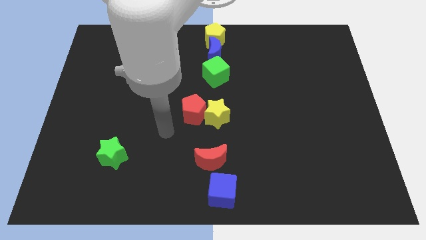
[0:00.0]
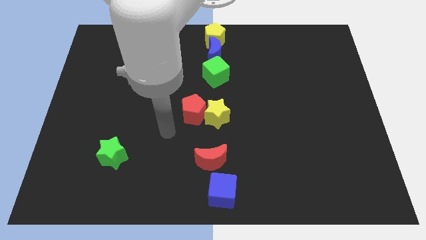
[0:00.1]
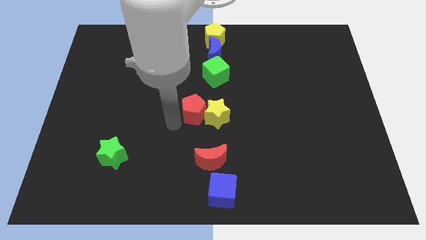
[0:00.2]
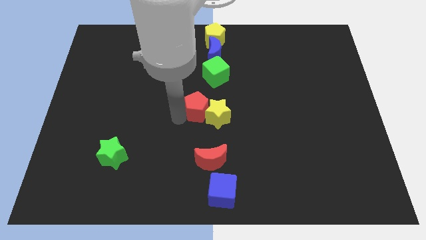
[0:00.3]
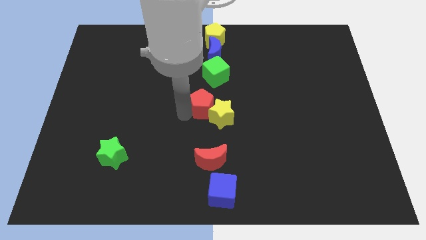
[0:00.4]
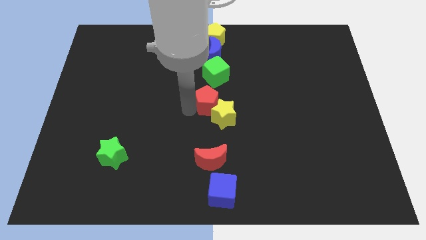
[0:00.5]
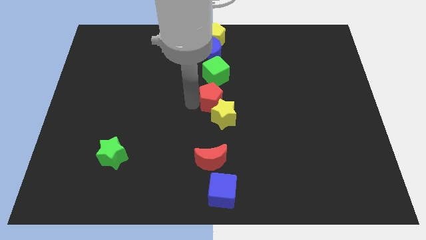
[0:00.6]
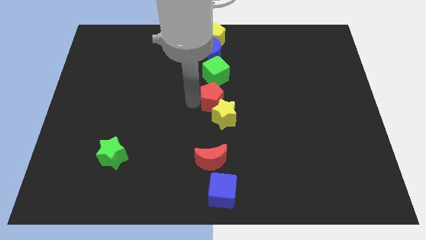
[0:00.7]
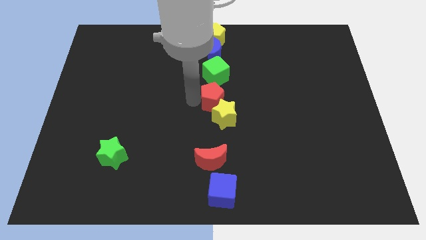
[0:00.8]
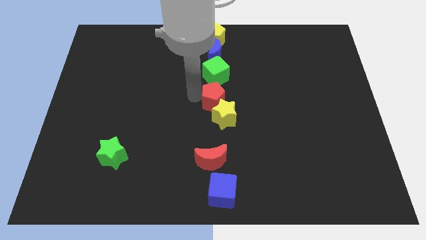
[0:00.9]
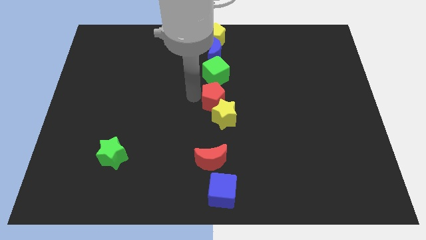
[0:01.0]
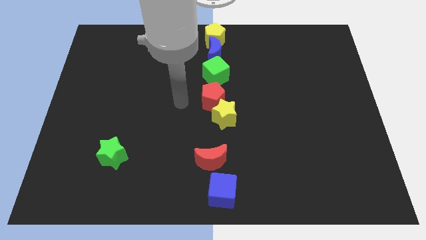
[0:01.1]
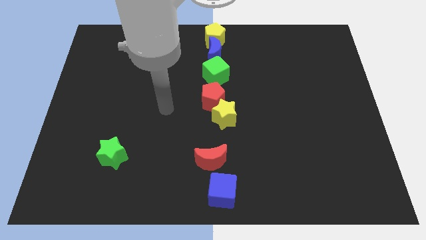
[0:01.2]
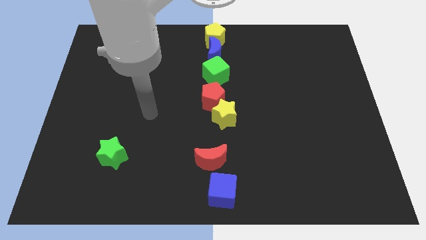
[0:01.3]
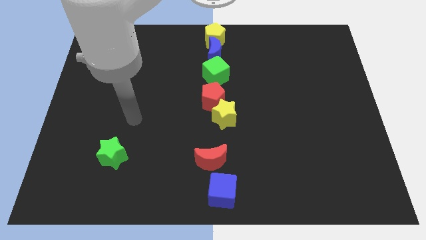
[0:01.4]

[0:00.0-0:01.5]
place the red pentagon above the yellow star

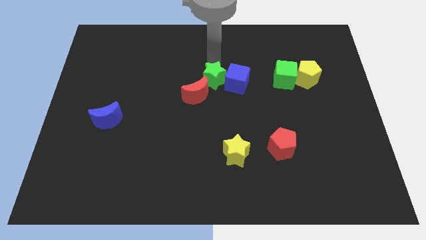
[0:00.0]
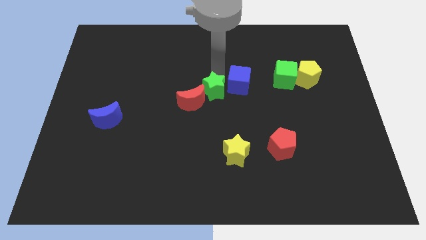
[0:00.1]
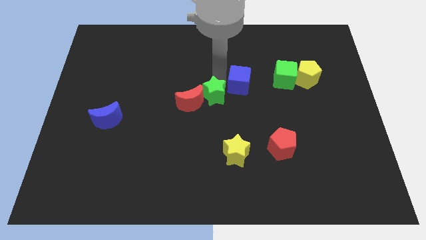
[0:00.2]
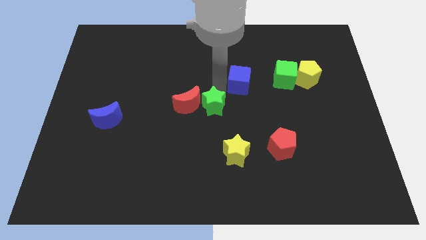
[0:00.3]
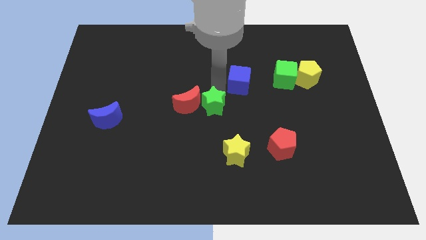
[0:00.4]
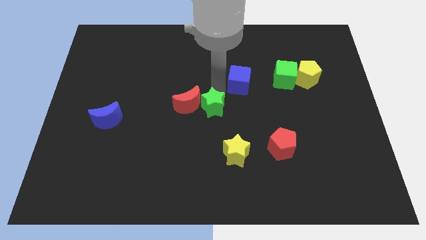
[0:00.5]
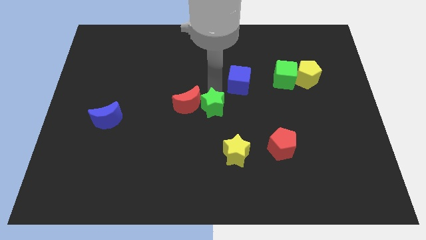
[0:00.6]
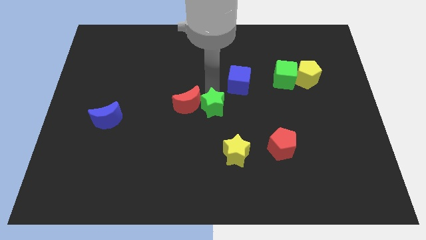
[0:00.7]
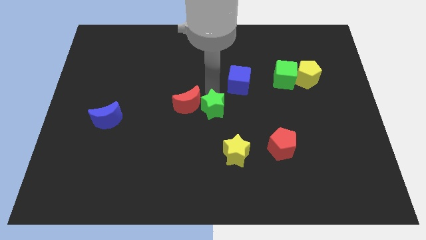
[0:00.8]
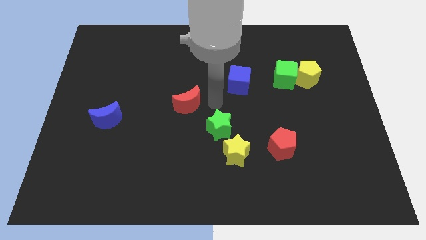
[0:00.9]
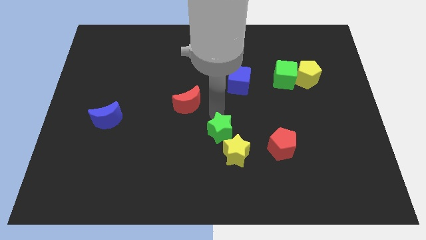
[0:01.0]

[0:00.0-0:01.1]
move green star towards yellow star

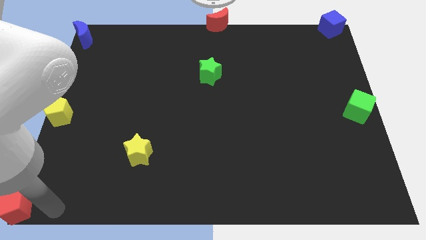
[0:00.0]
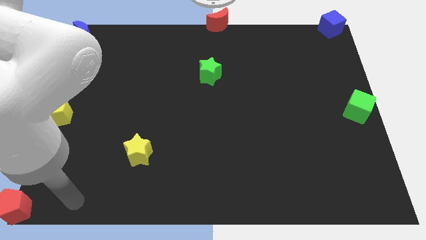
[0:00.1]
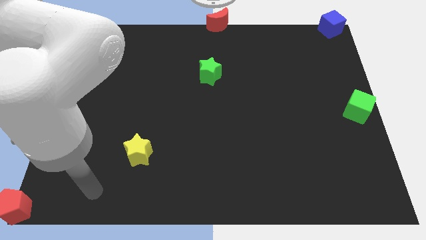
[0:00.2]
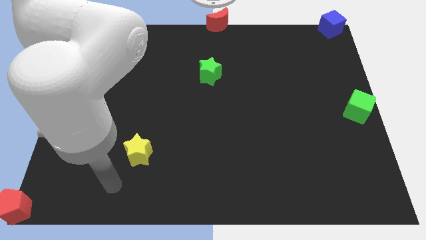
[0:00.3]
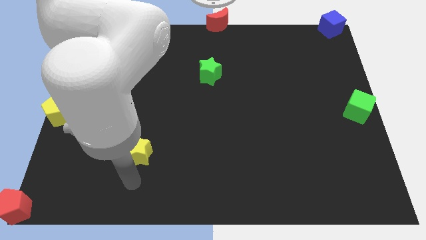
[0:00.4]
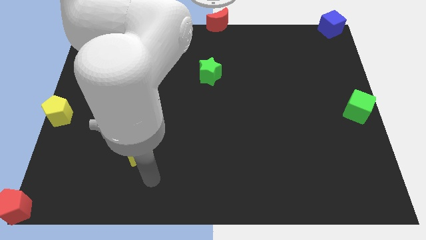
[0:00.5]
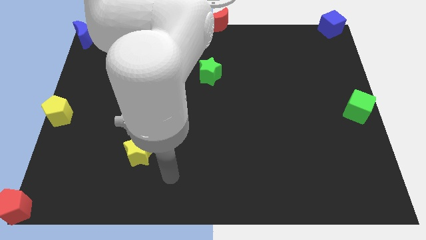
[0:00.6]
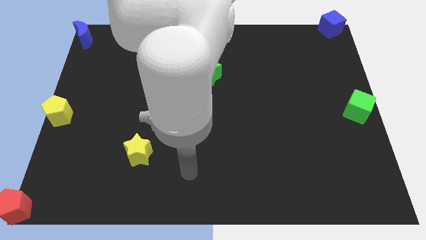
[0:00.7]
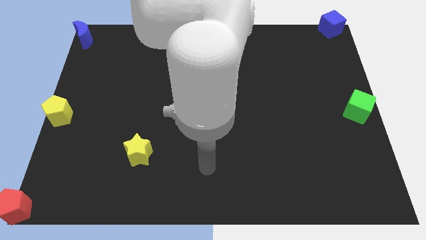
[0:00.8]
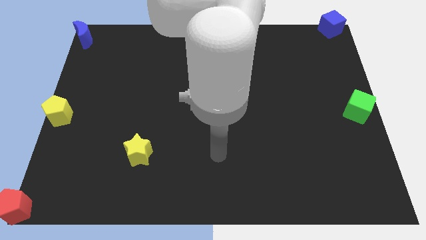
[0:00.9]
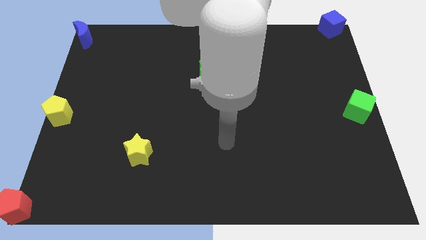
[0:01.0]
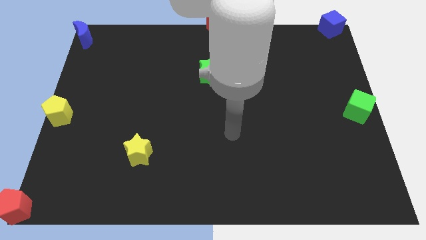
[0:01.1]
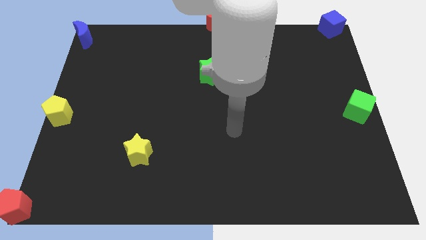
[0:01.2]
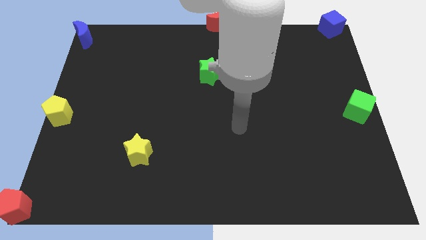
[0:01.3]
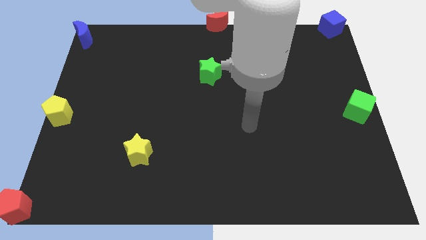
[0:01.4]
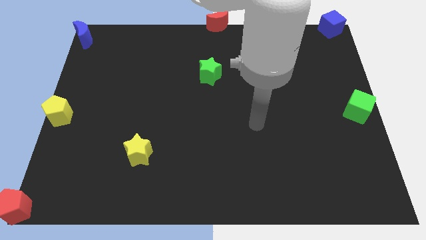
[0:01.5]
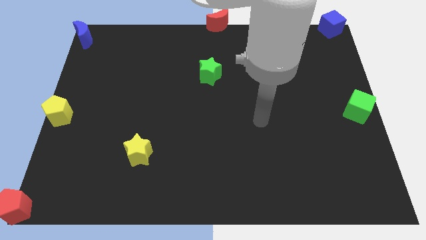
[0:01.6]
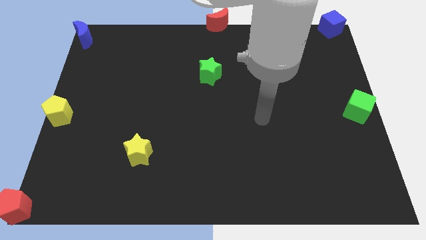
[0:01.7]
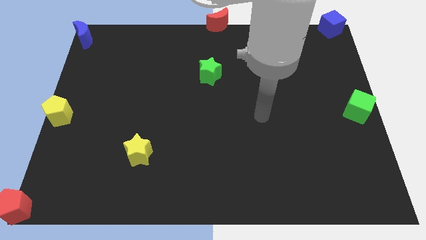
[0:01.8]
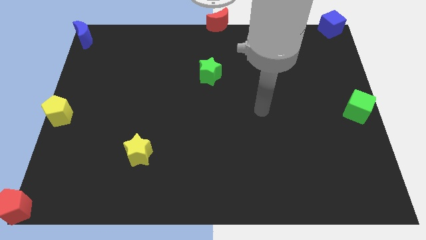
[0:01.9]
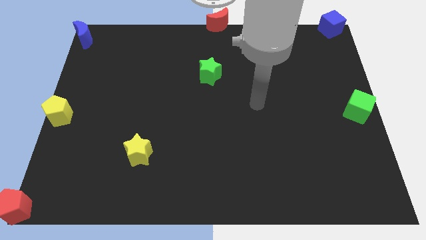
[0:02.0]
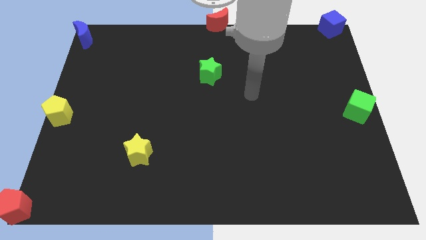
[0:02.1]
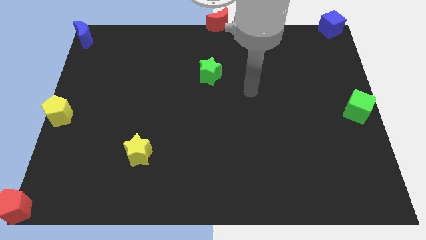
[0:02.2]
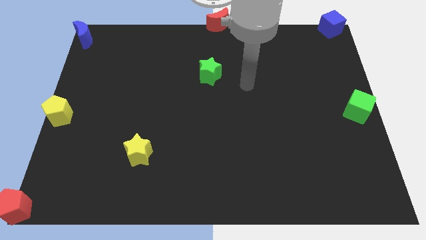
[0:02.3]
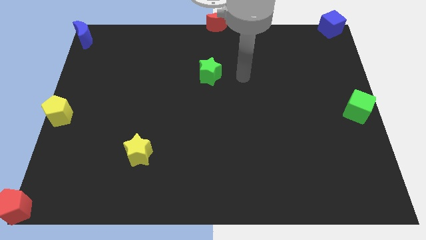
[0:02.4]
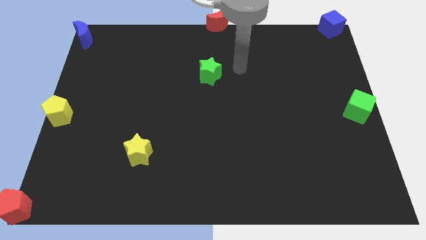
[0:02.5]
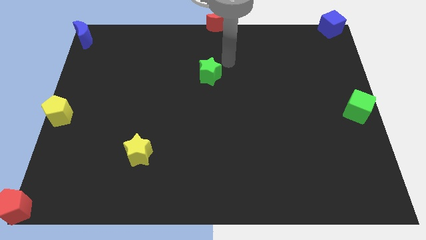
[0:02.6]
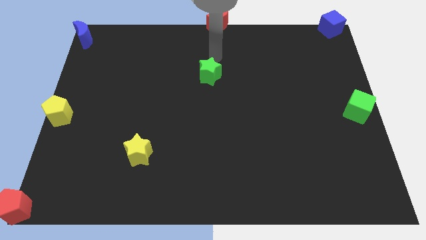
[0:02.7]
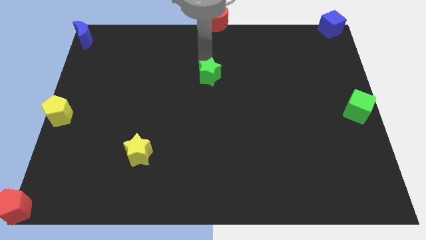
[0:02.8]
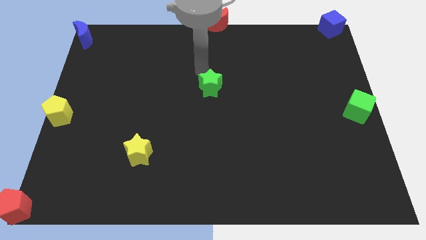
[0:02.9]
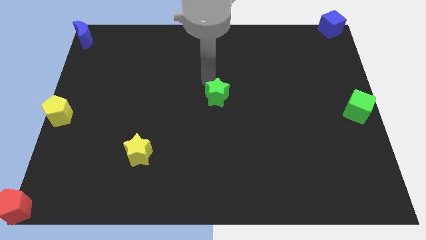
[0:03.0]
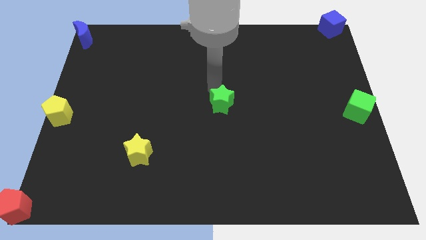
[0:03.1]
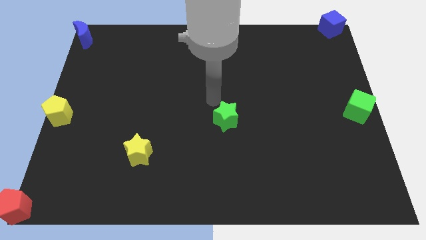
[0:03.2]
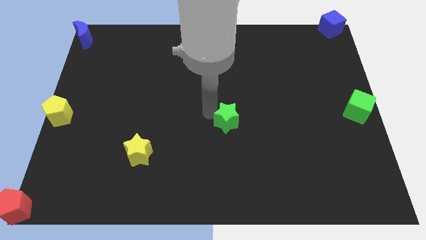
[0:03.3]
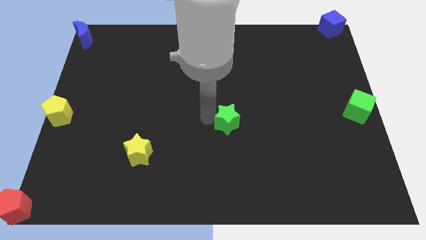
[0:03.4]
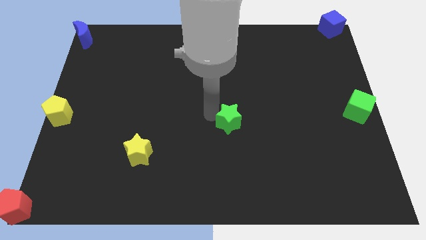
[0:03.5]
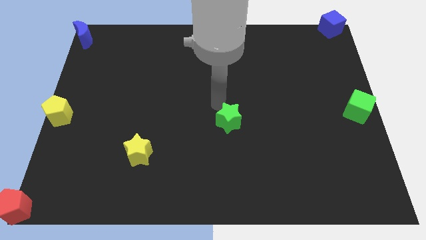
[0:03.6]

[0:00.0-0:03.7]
push the green star to the center of the board

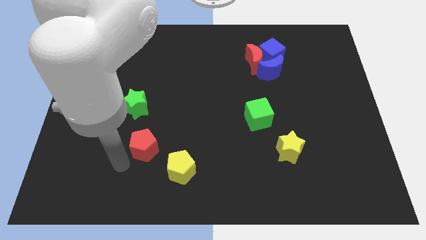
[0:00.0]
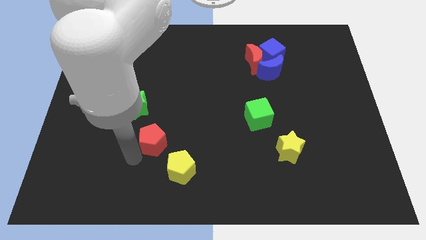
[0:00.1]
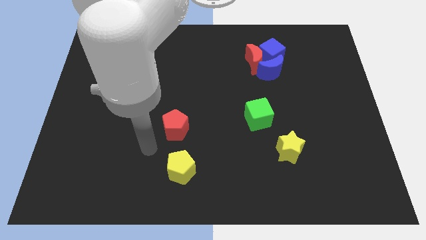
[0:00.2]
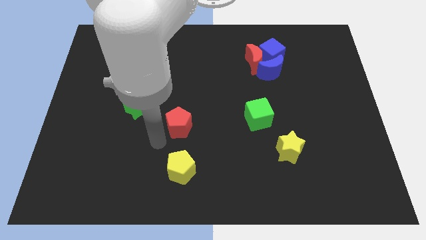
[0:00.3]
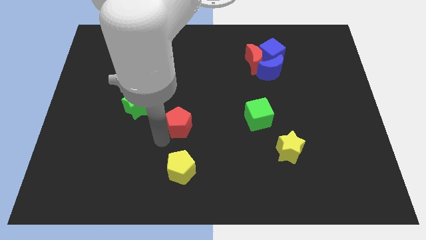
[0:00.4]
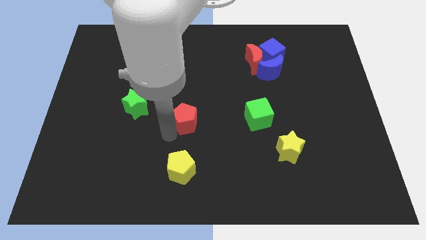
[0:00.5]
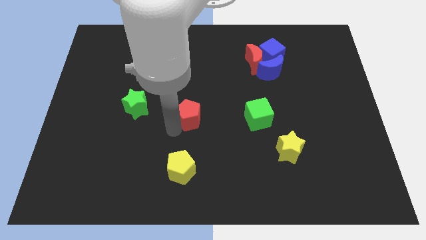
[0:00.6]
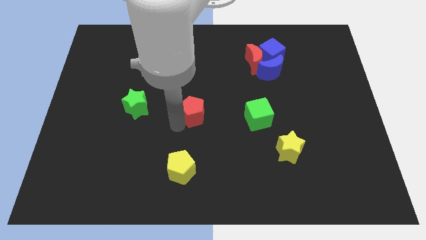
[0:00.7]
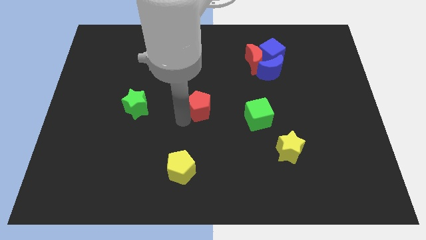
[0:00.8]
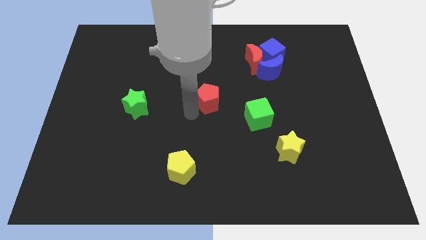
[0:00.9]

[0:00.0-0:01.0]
place the red pentagon at the center of the board

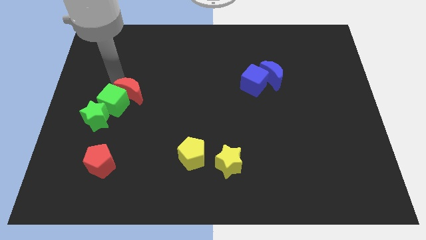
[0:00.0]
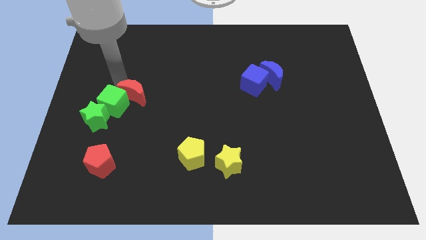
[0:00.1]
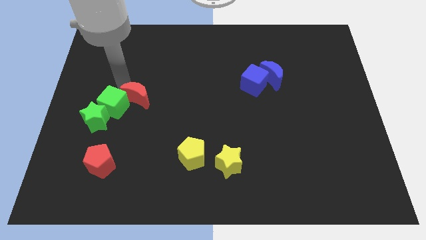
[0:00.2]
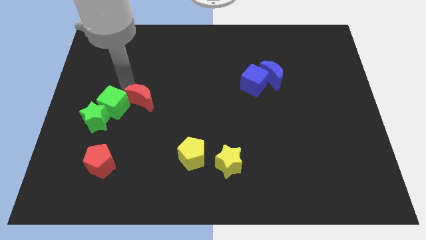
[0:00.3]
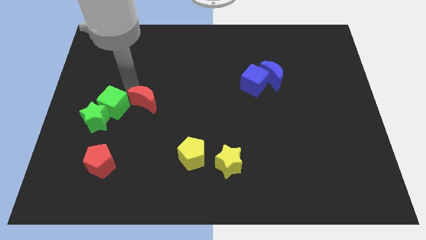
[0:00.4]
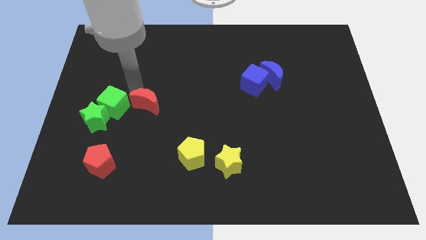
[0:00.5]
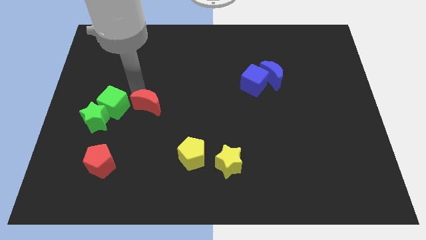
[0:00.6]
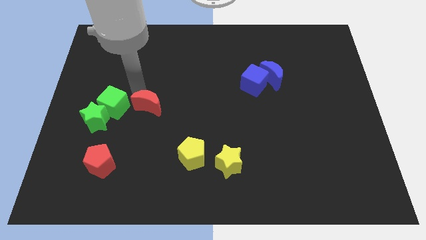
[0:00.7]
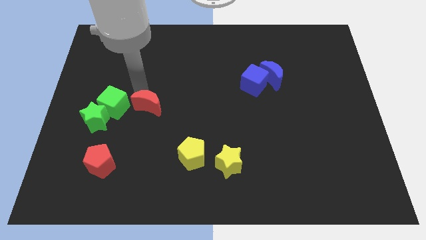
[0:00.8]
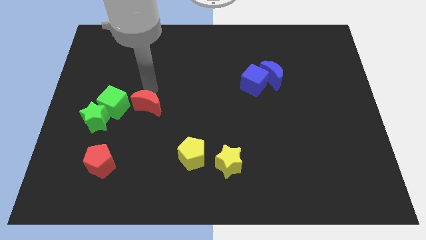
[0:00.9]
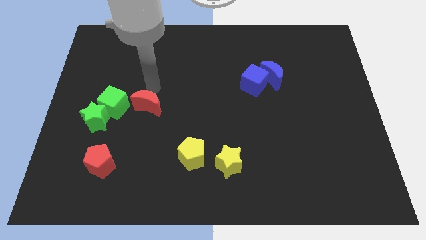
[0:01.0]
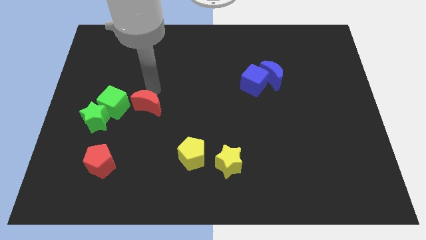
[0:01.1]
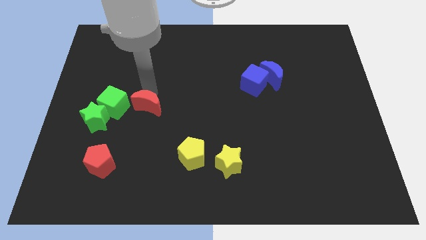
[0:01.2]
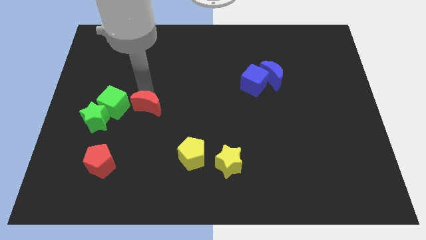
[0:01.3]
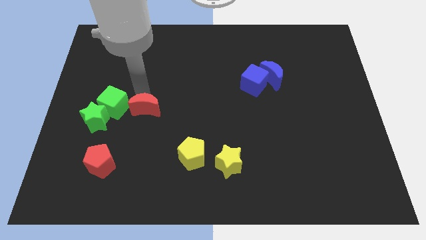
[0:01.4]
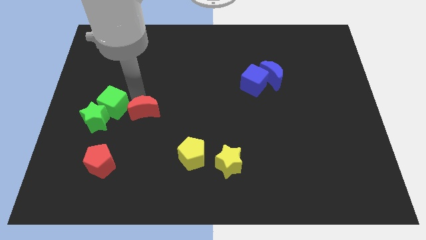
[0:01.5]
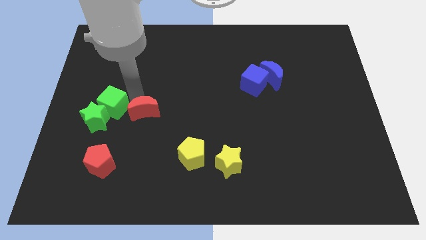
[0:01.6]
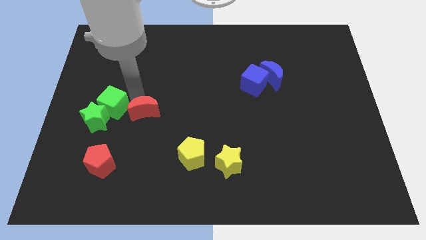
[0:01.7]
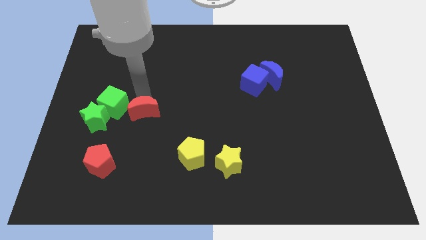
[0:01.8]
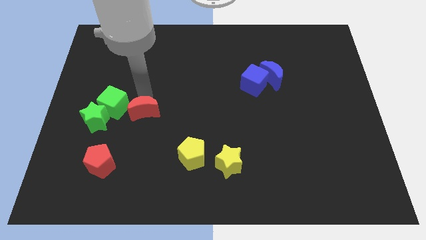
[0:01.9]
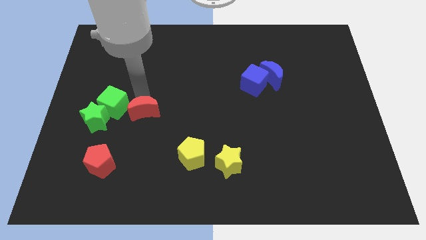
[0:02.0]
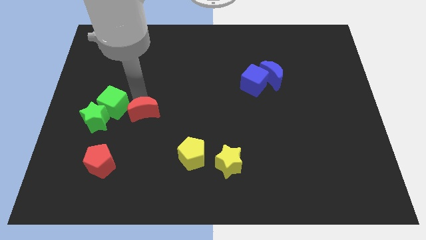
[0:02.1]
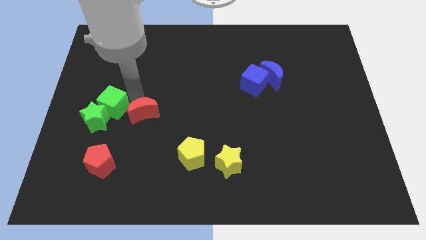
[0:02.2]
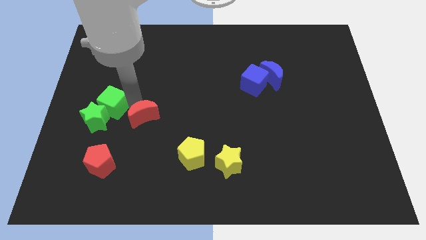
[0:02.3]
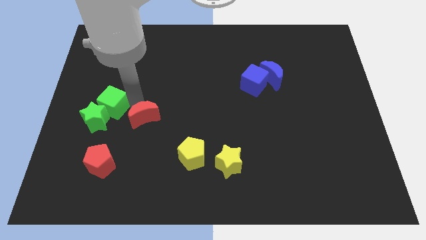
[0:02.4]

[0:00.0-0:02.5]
drag the red moon beside the green cube
